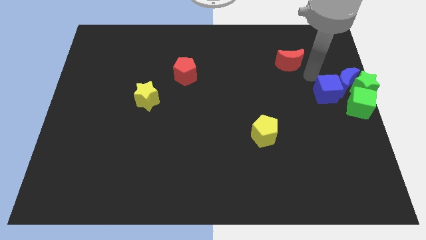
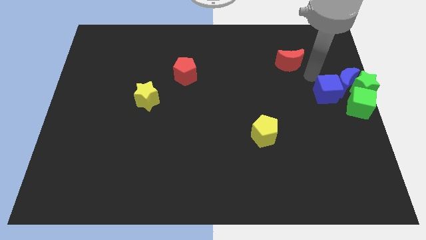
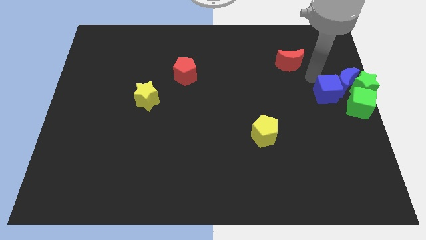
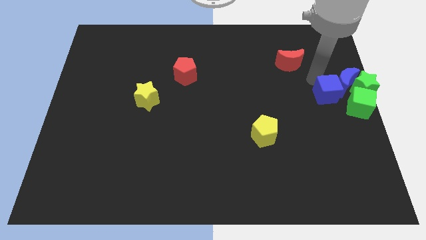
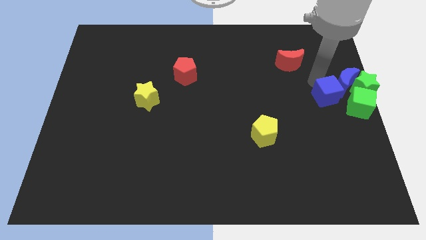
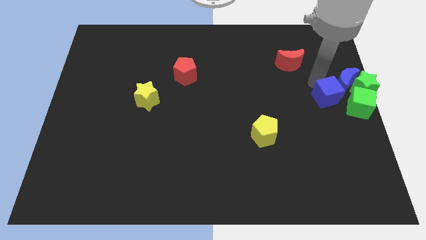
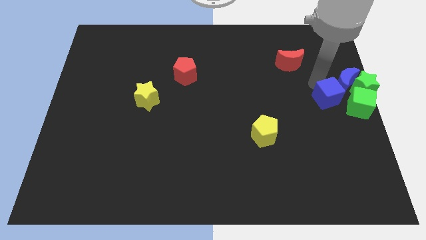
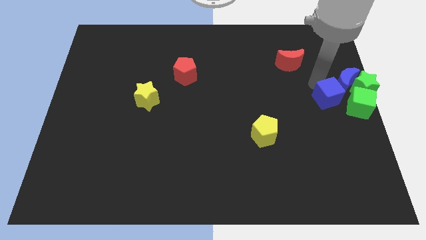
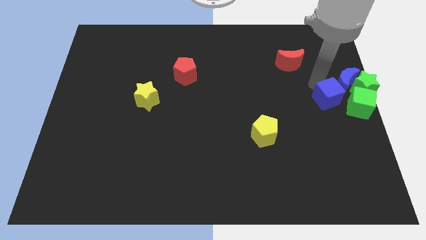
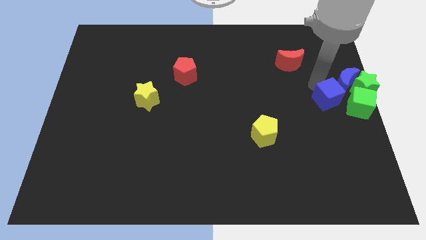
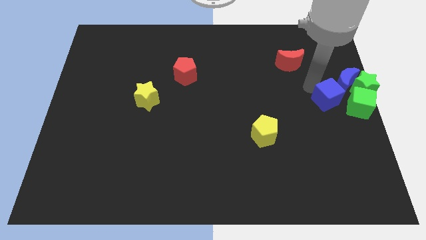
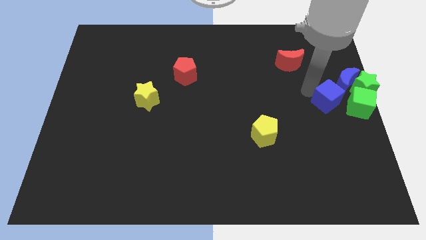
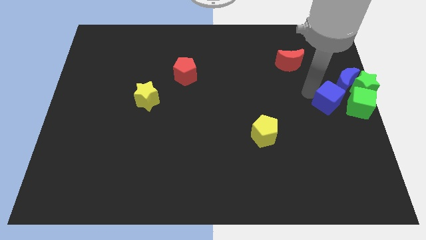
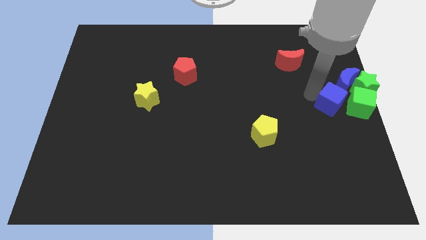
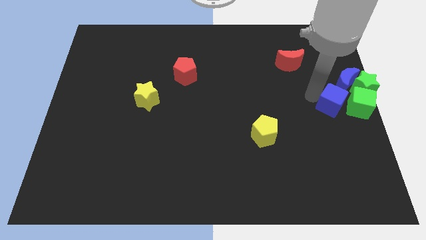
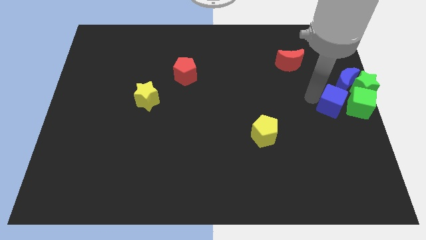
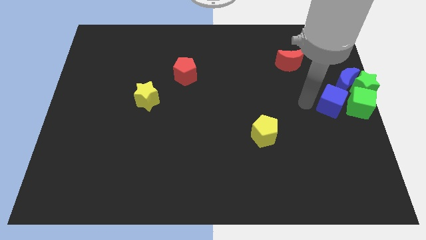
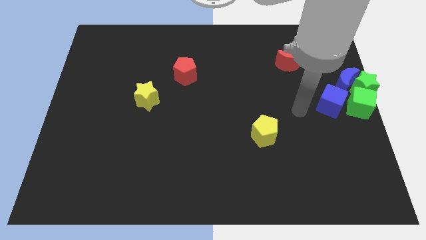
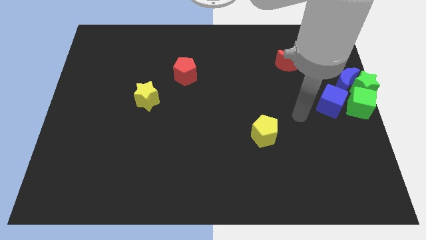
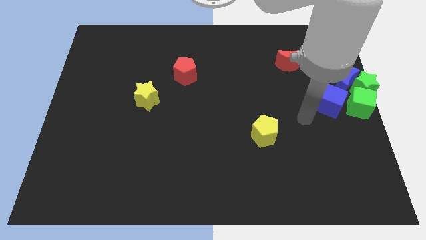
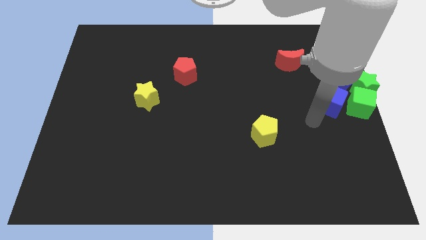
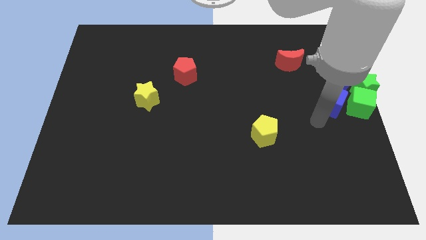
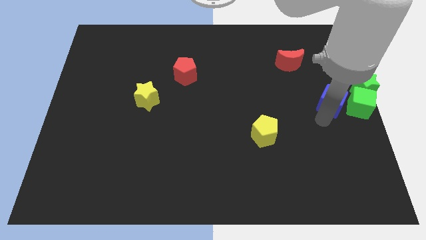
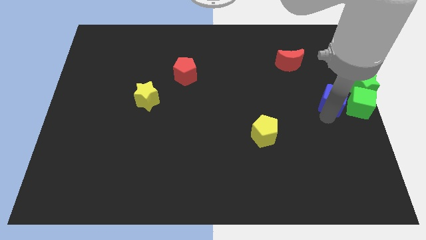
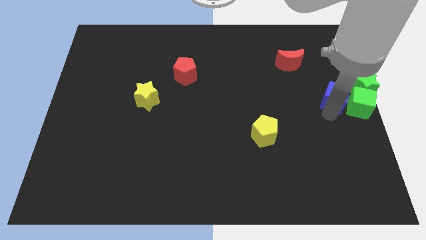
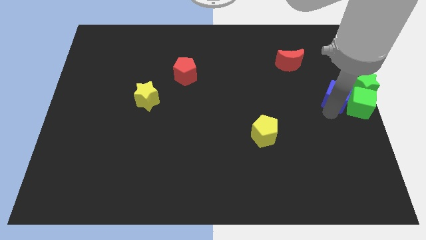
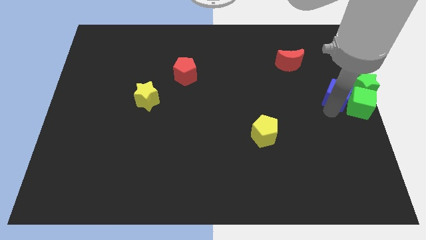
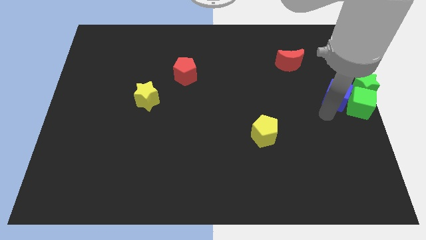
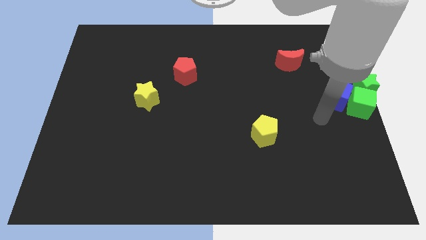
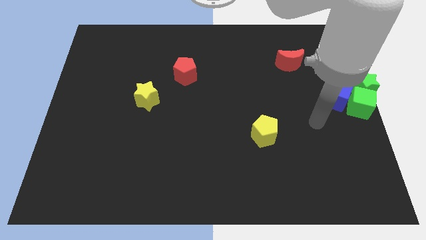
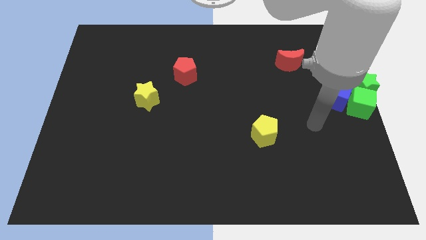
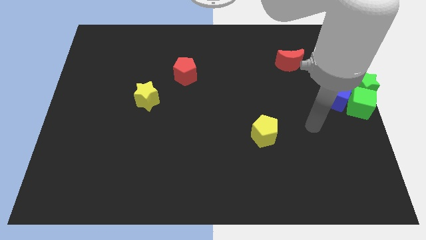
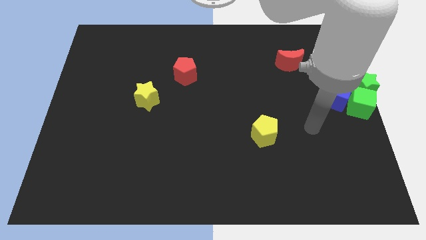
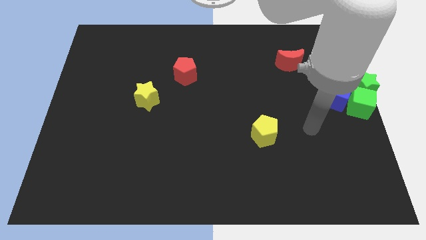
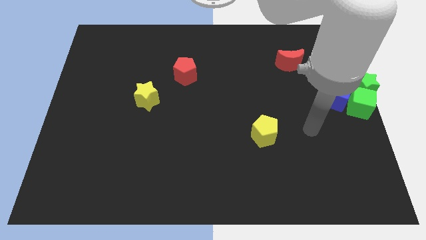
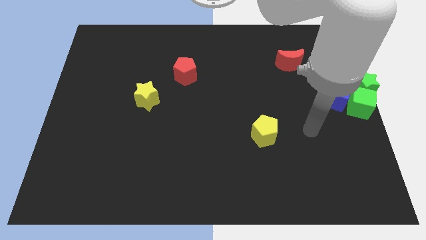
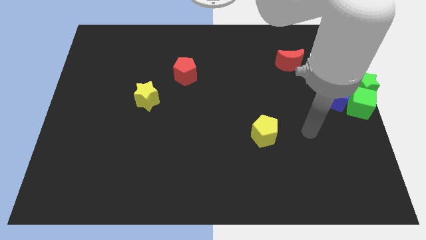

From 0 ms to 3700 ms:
place the blue cube left to the green cube

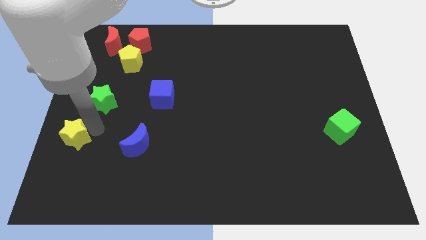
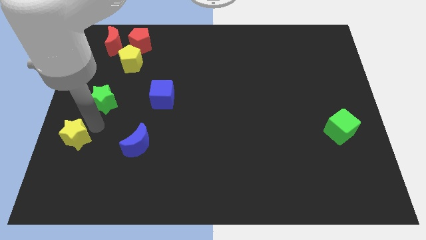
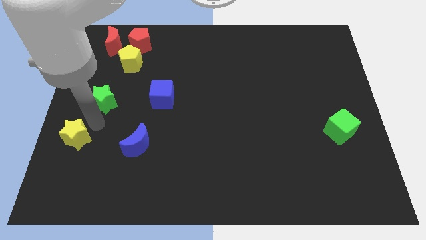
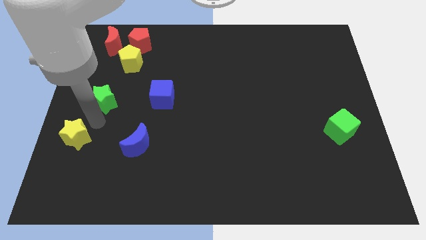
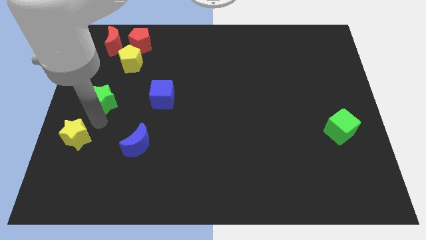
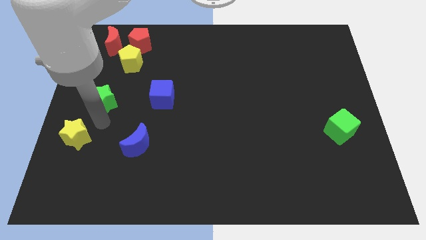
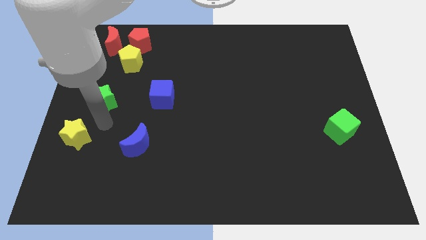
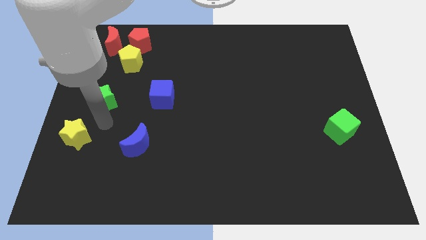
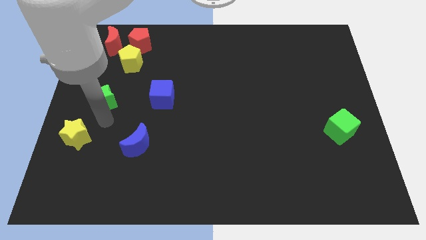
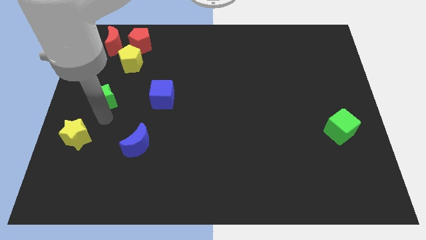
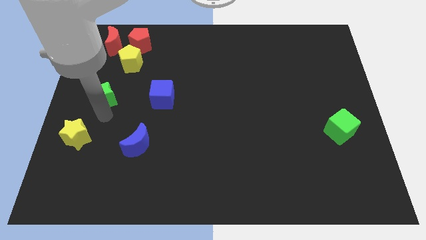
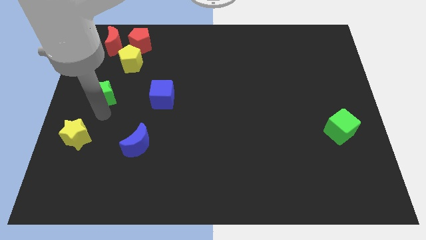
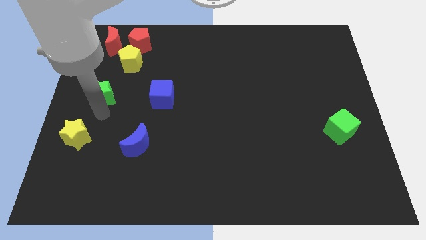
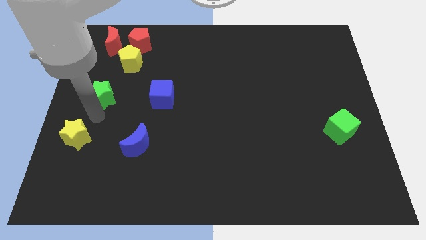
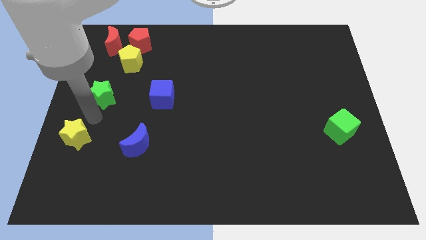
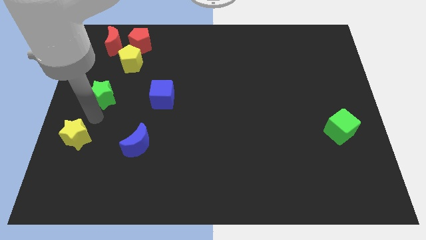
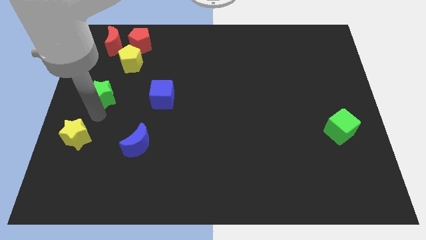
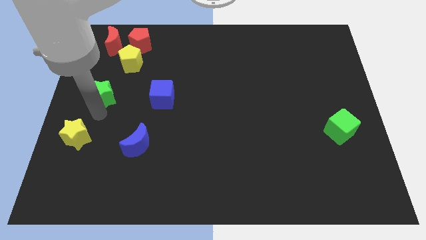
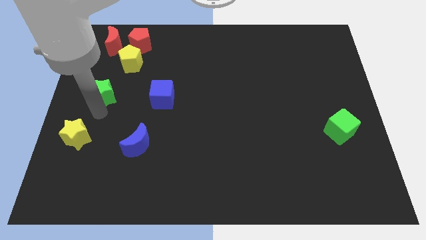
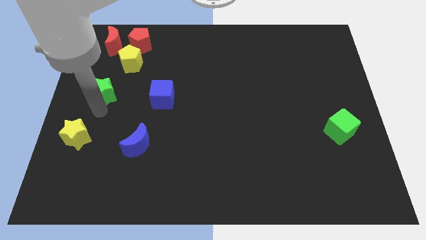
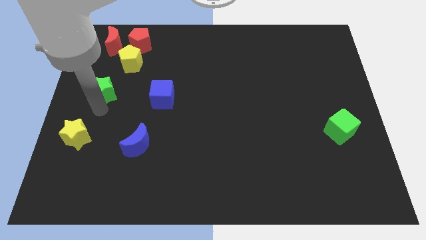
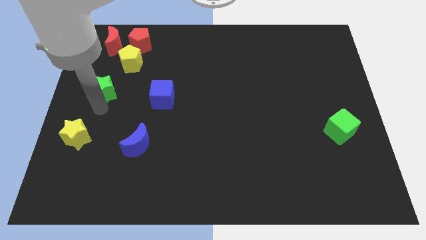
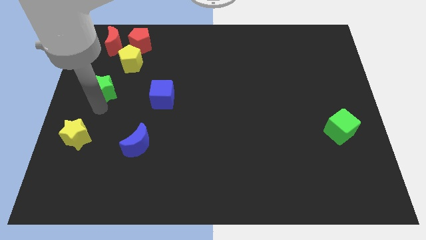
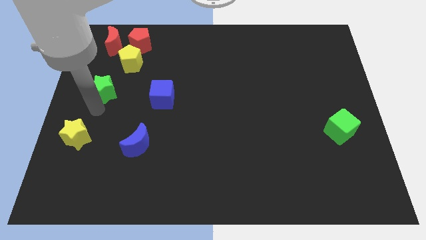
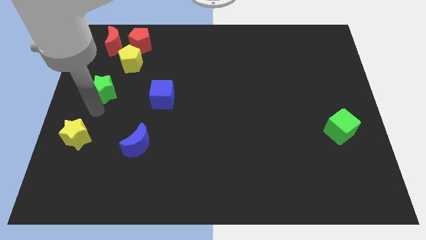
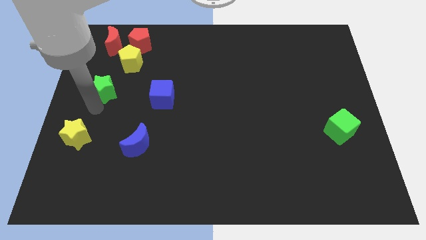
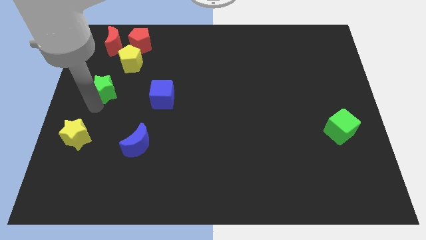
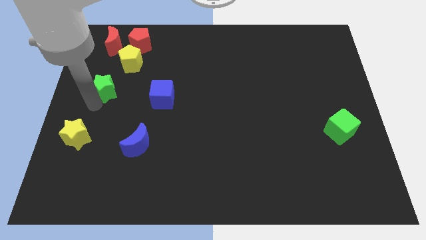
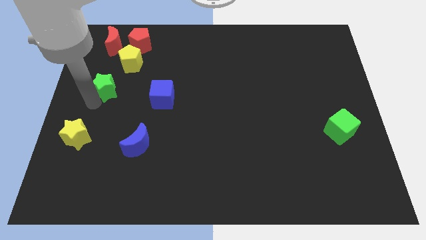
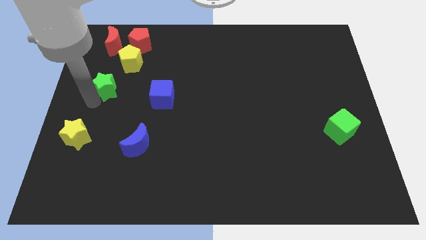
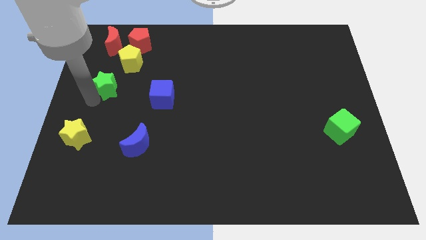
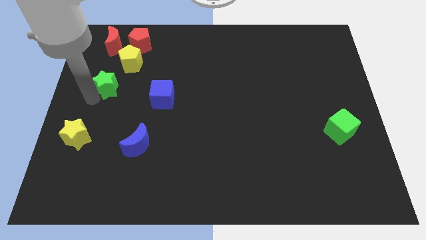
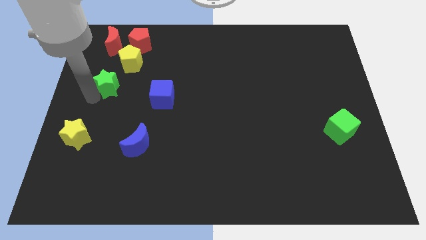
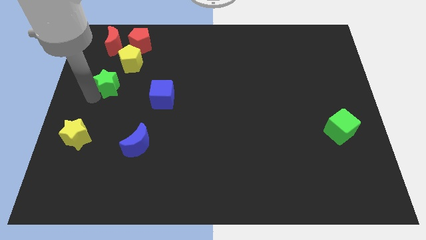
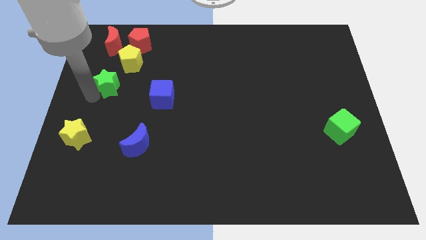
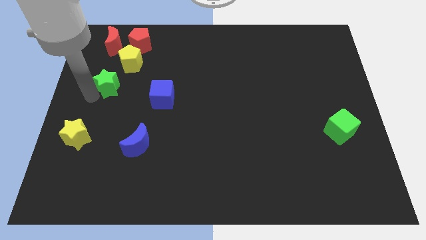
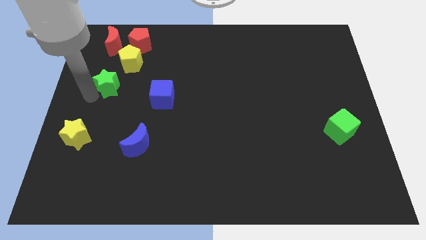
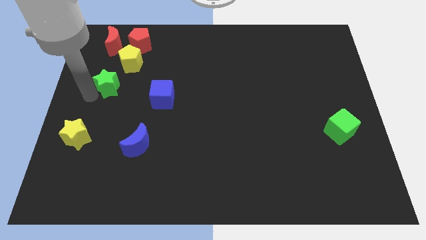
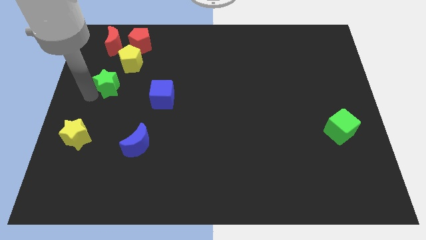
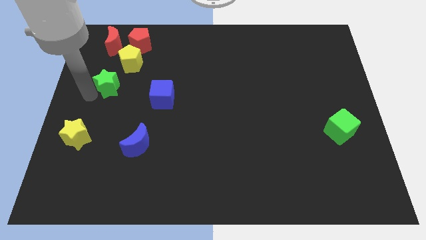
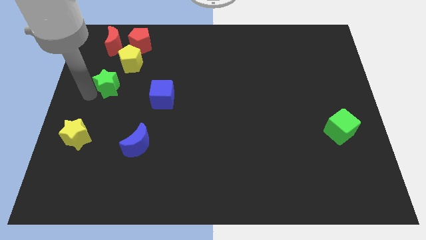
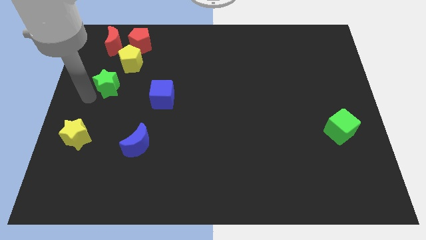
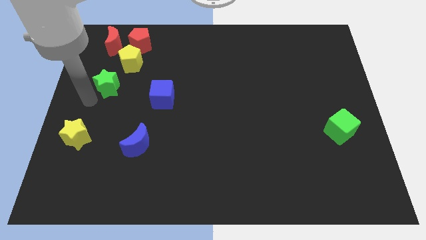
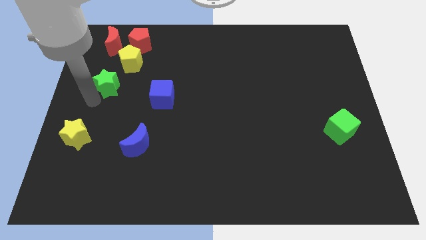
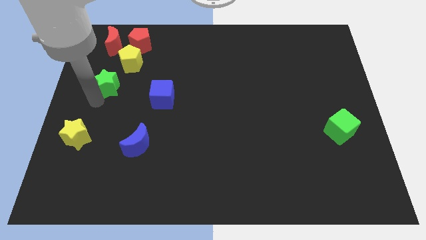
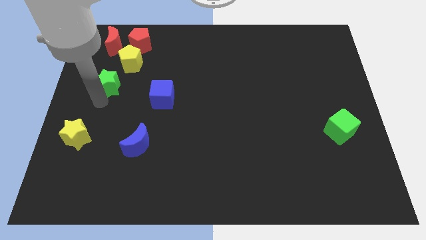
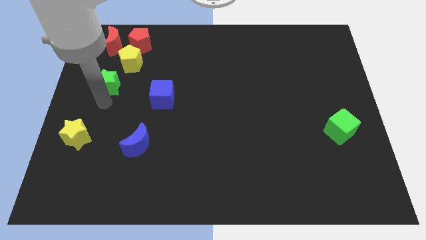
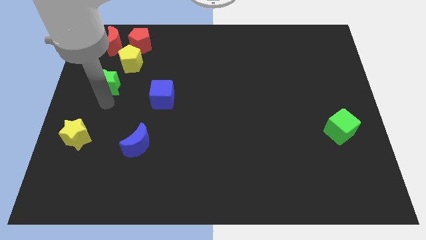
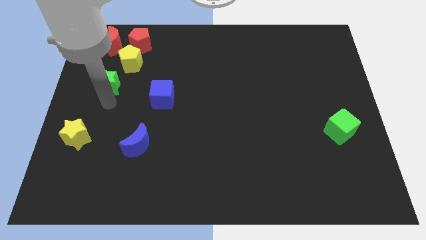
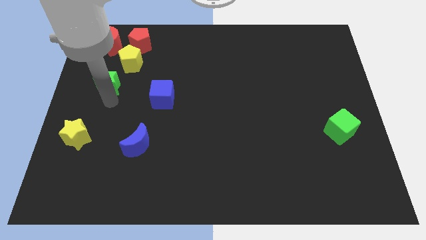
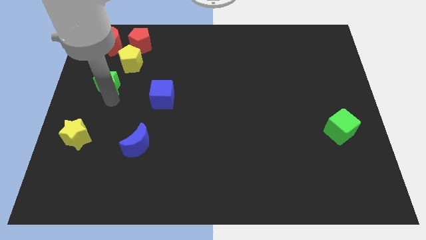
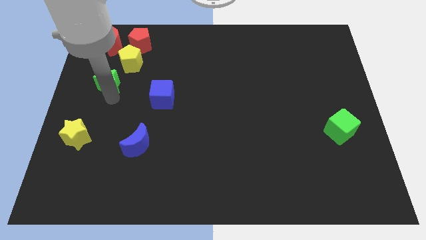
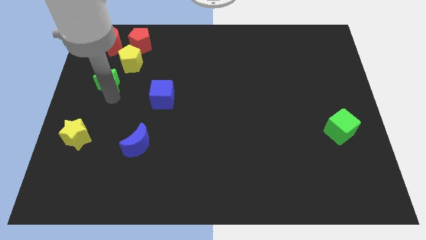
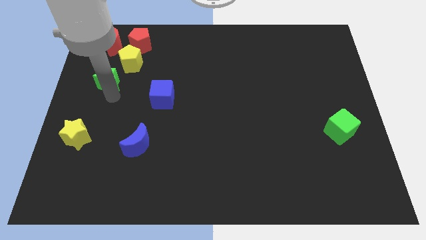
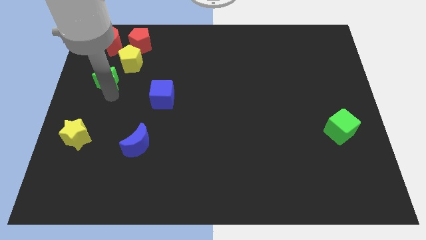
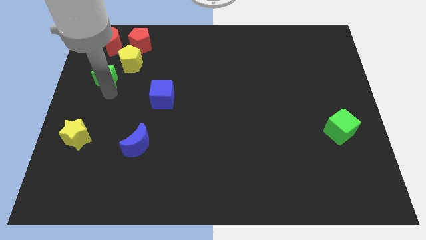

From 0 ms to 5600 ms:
slide the green star diagonally top left to the blue cube
